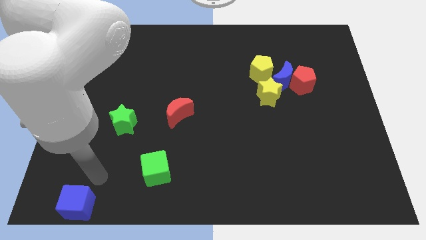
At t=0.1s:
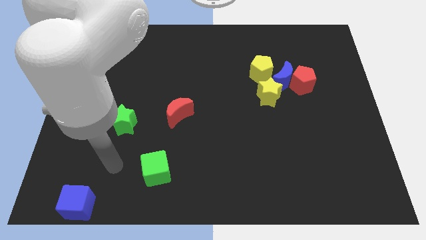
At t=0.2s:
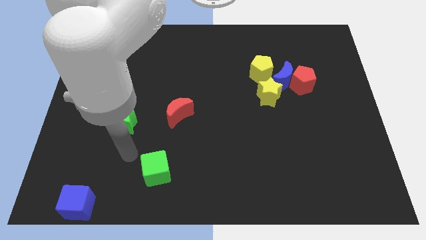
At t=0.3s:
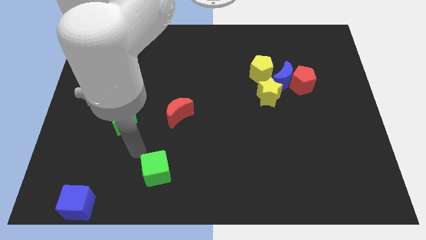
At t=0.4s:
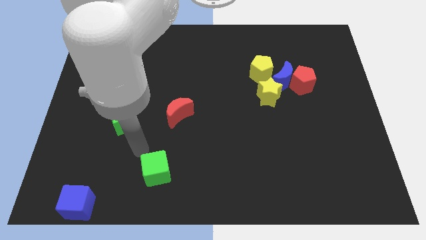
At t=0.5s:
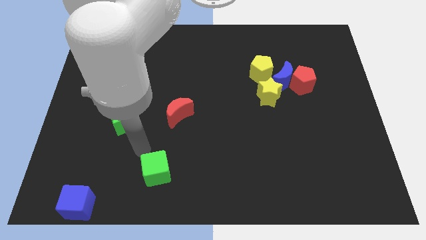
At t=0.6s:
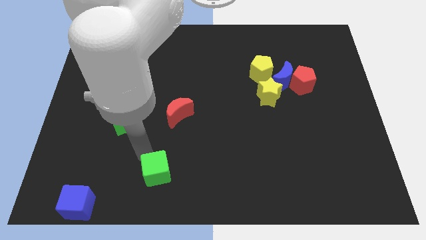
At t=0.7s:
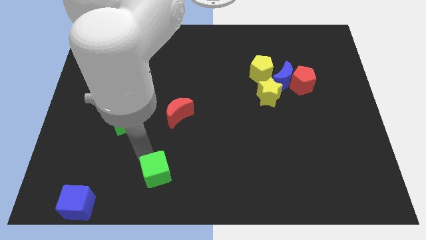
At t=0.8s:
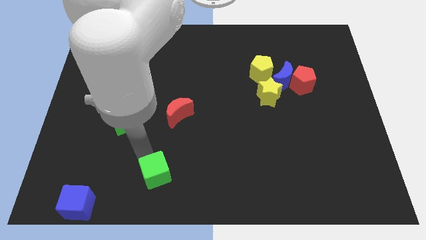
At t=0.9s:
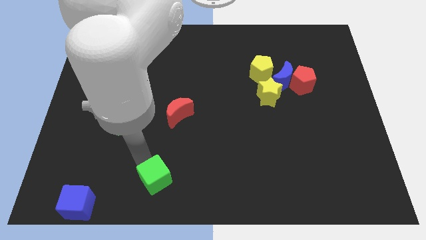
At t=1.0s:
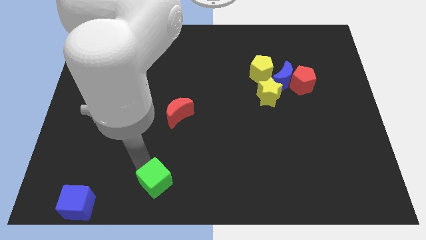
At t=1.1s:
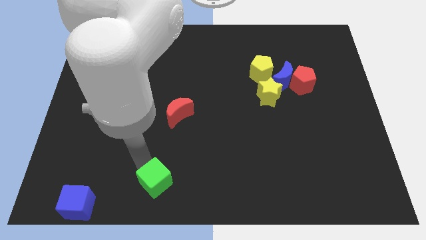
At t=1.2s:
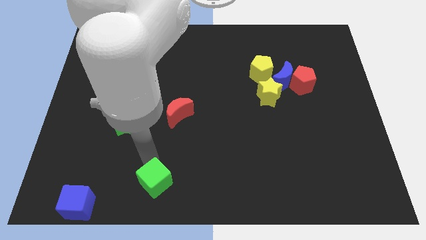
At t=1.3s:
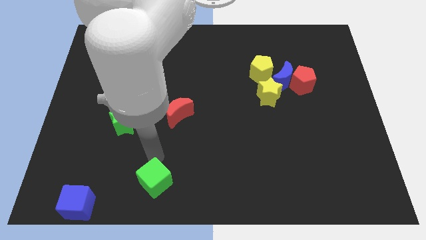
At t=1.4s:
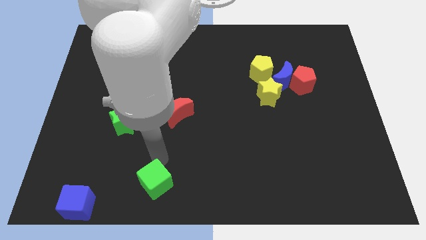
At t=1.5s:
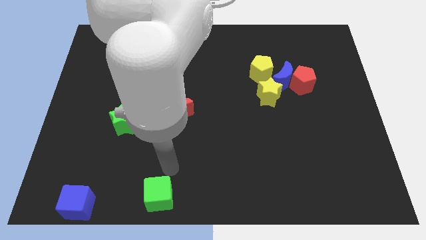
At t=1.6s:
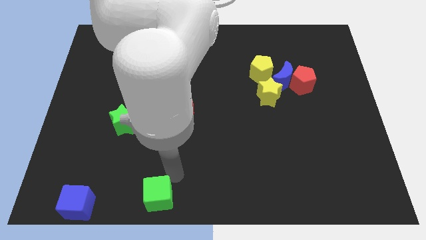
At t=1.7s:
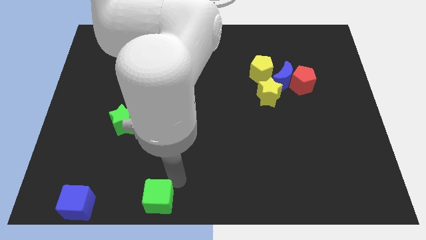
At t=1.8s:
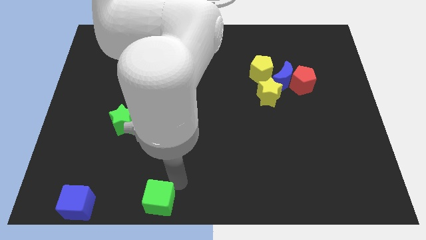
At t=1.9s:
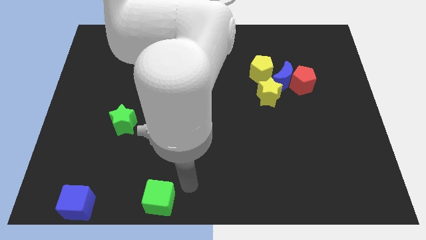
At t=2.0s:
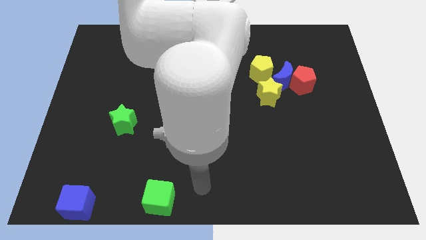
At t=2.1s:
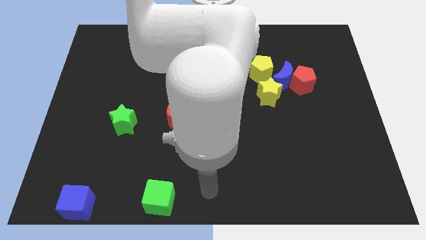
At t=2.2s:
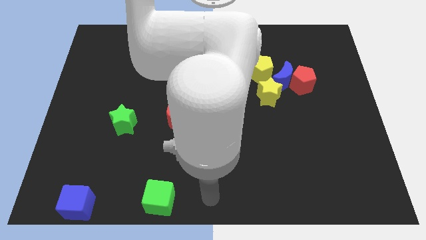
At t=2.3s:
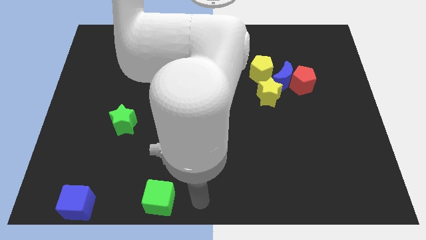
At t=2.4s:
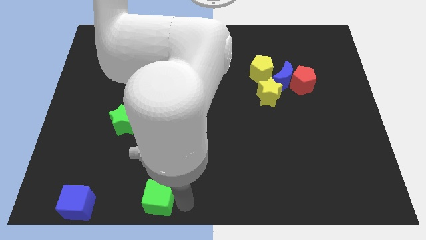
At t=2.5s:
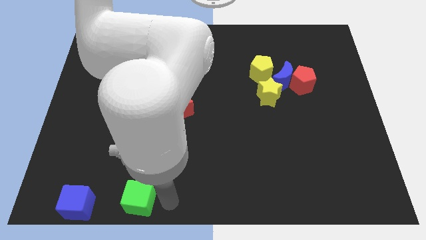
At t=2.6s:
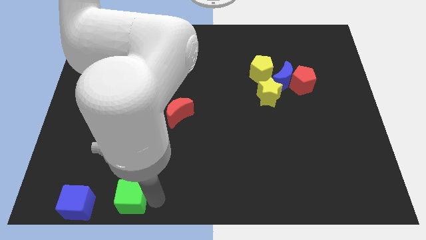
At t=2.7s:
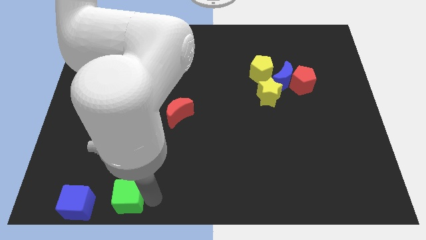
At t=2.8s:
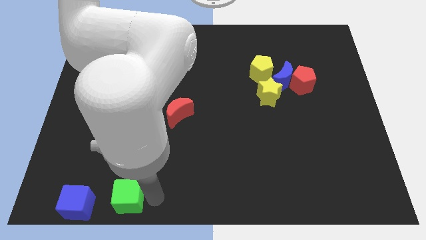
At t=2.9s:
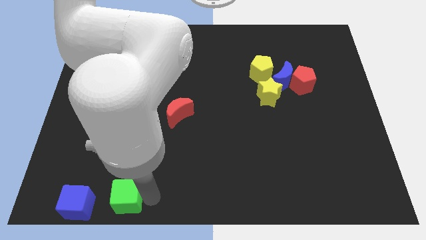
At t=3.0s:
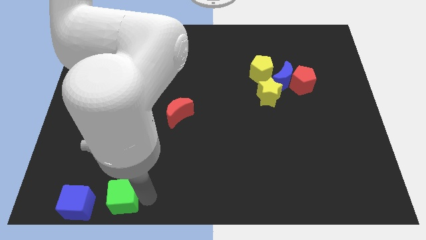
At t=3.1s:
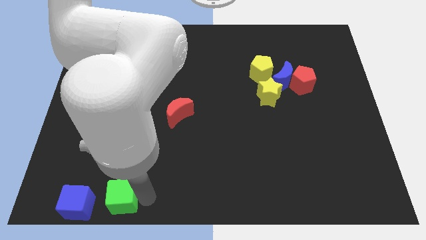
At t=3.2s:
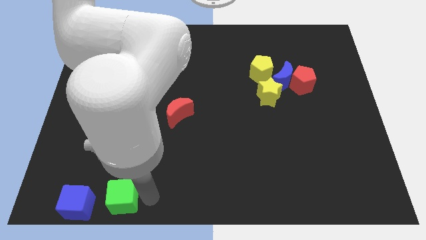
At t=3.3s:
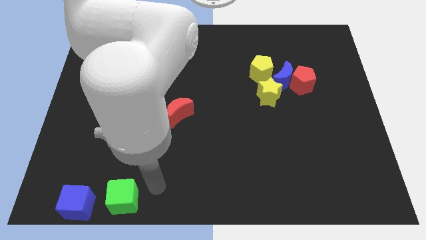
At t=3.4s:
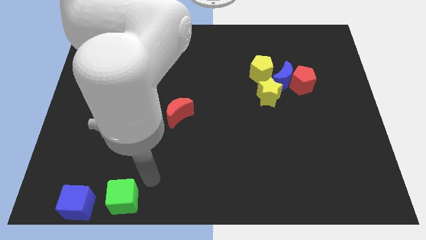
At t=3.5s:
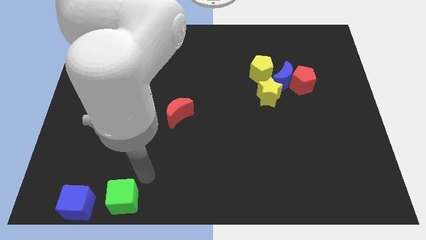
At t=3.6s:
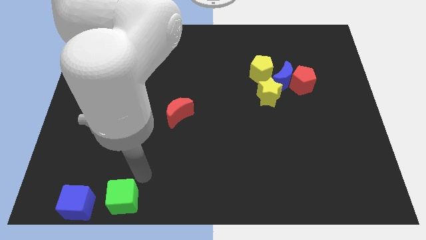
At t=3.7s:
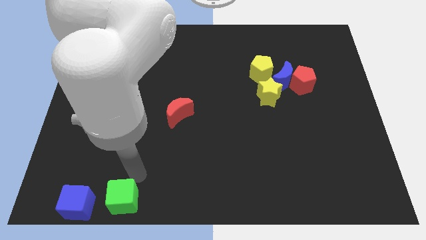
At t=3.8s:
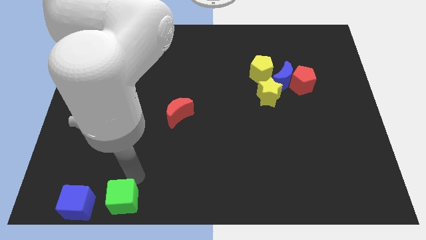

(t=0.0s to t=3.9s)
place the green cube to the right of the blue cube

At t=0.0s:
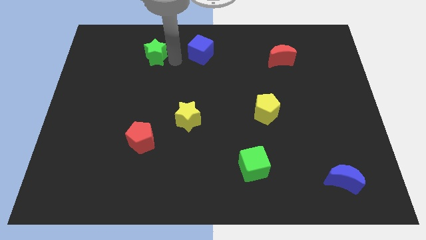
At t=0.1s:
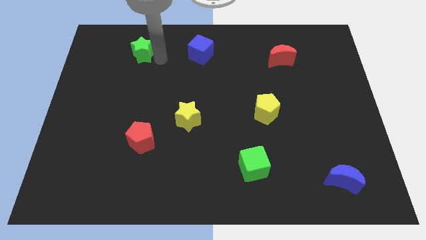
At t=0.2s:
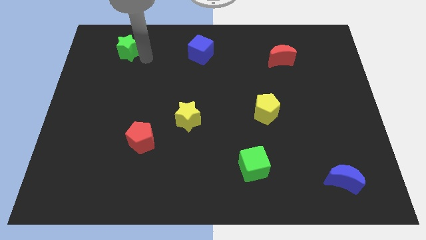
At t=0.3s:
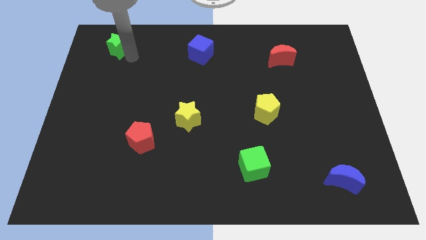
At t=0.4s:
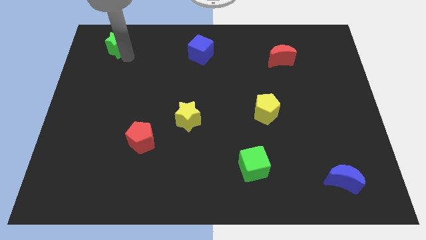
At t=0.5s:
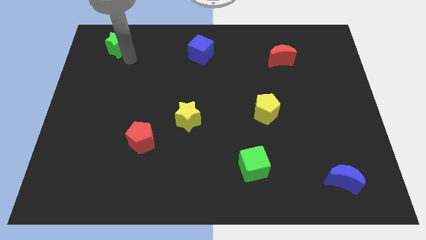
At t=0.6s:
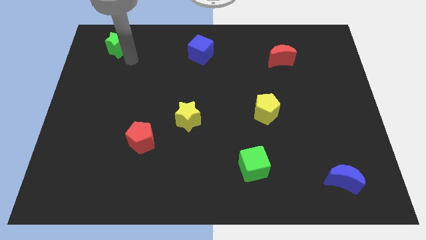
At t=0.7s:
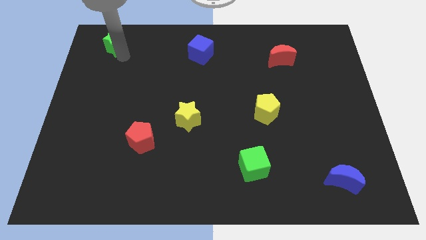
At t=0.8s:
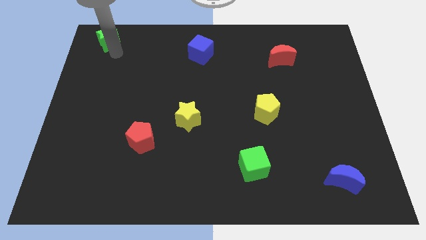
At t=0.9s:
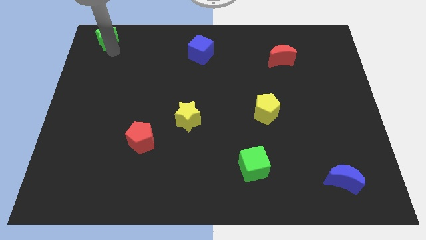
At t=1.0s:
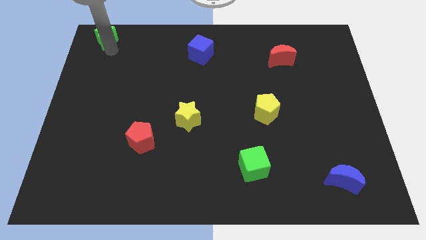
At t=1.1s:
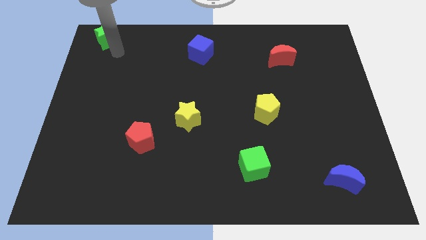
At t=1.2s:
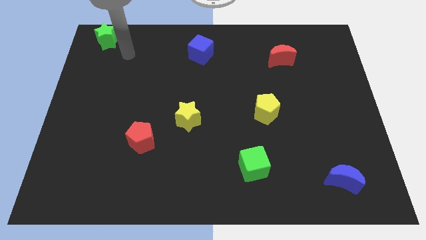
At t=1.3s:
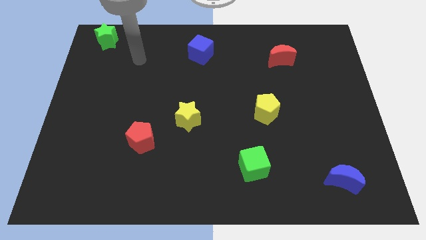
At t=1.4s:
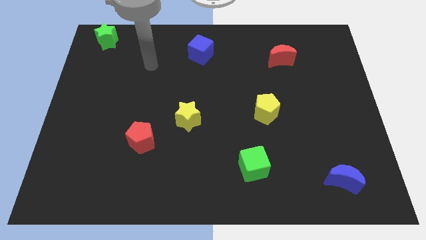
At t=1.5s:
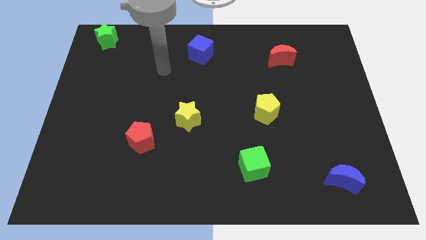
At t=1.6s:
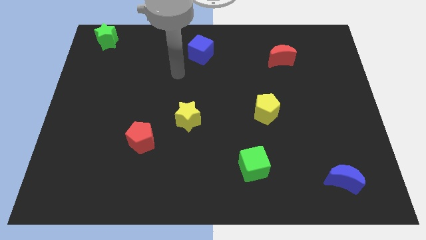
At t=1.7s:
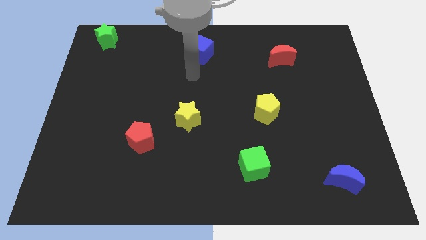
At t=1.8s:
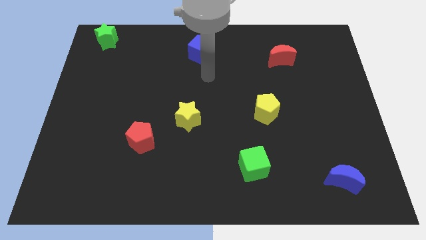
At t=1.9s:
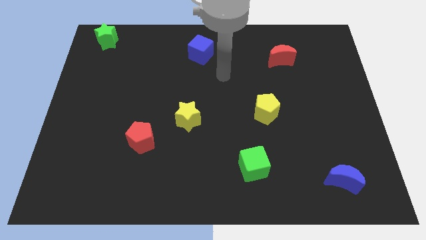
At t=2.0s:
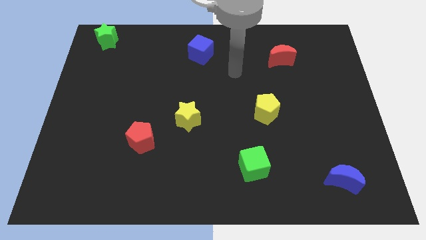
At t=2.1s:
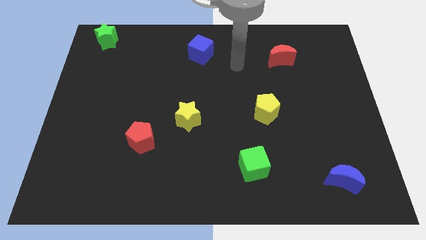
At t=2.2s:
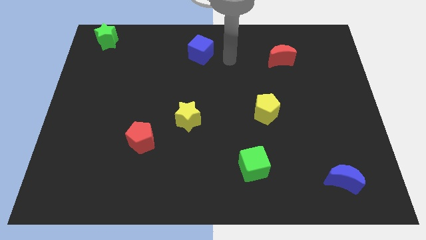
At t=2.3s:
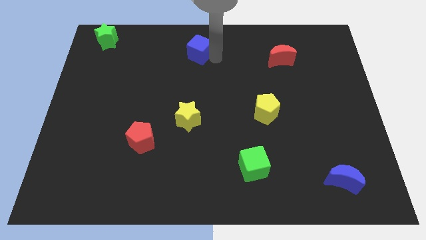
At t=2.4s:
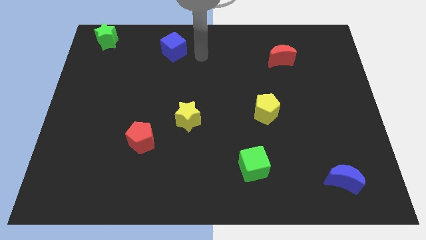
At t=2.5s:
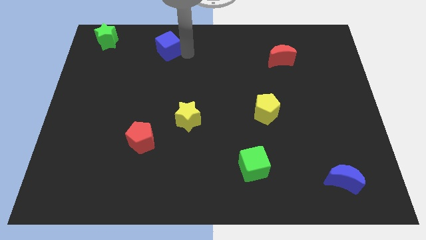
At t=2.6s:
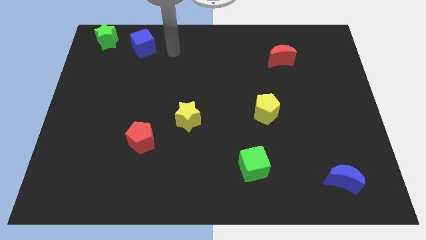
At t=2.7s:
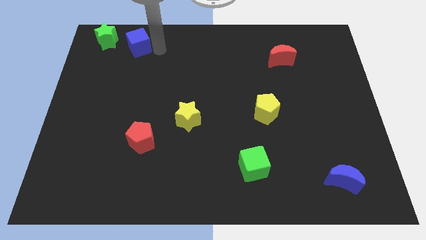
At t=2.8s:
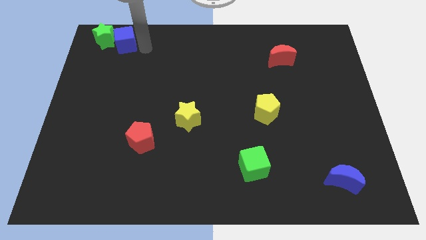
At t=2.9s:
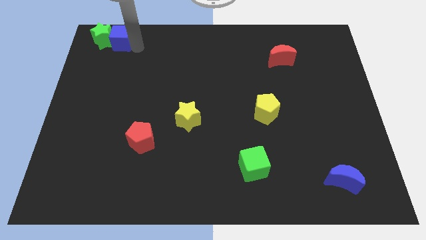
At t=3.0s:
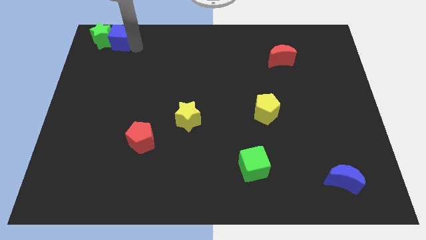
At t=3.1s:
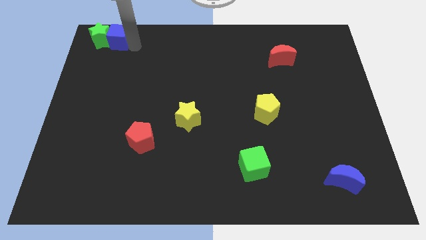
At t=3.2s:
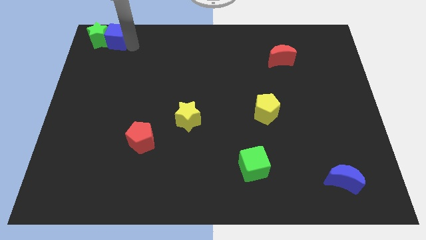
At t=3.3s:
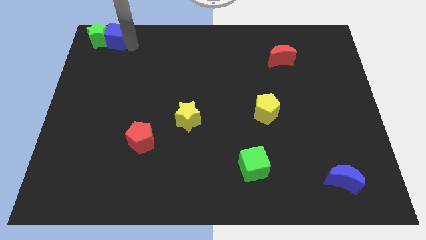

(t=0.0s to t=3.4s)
move the blue cube into the green star

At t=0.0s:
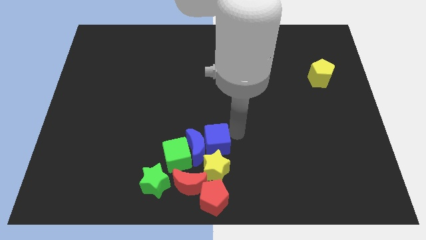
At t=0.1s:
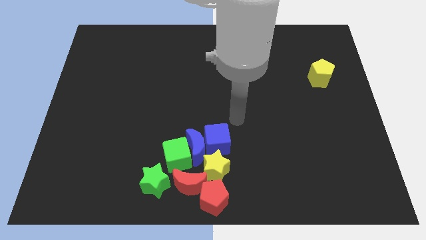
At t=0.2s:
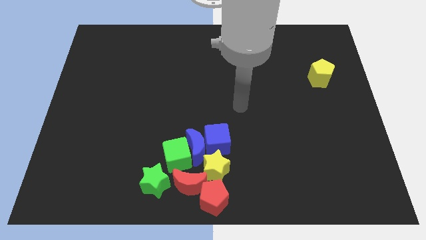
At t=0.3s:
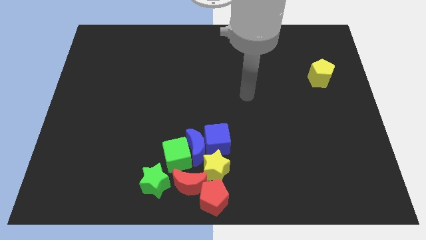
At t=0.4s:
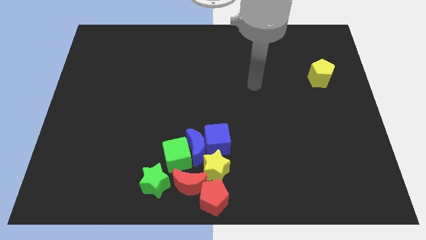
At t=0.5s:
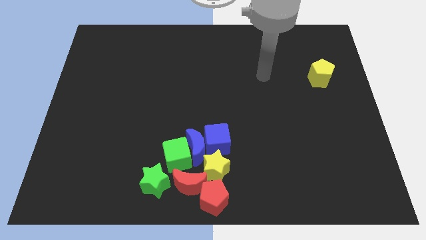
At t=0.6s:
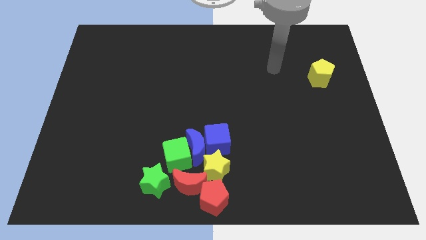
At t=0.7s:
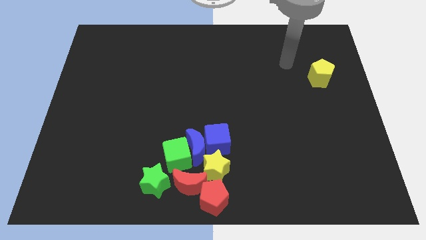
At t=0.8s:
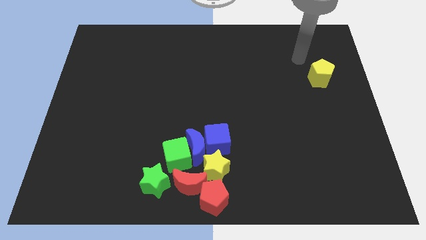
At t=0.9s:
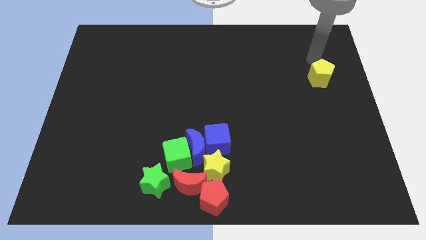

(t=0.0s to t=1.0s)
move your arm closer to the top of the yellow pentagon

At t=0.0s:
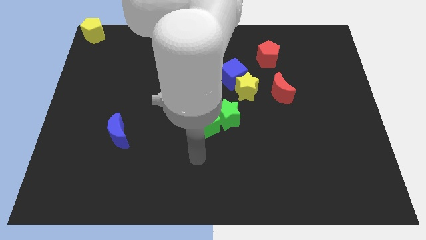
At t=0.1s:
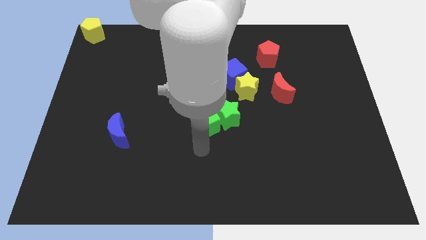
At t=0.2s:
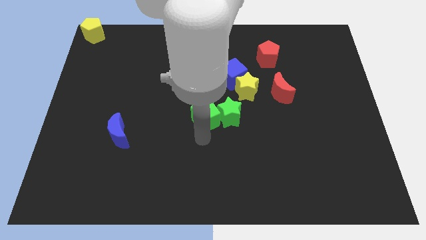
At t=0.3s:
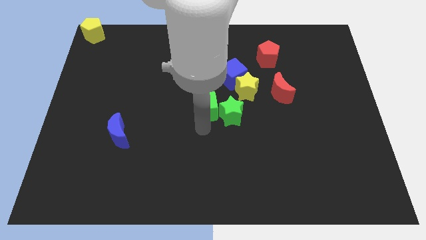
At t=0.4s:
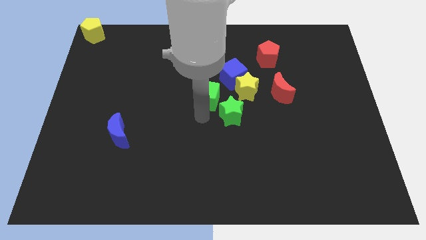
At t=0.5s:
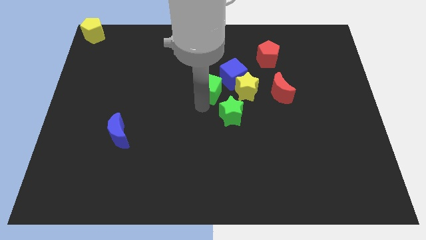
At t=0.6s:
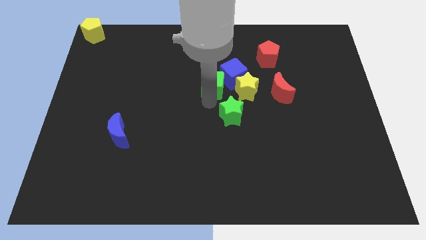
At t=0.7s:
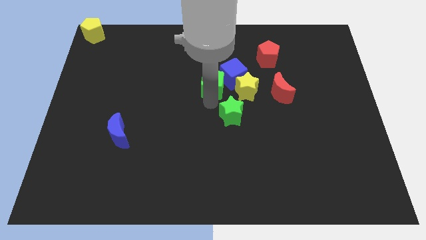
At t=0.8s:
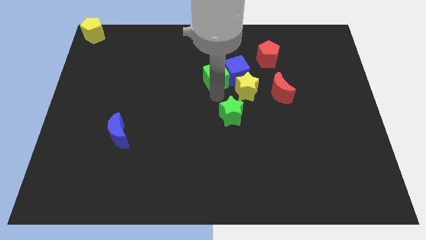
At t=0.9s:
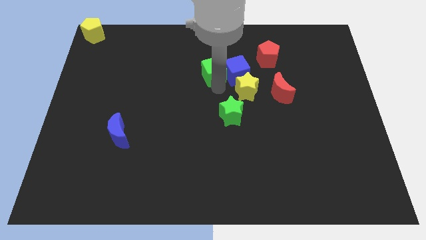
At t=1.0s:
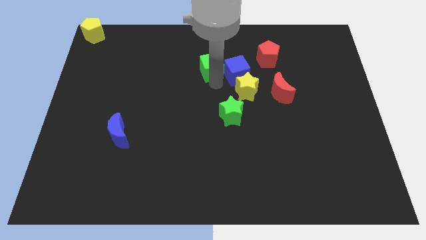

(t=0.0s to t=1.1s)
slide green cube to the left of blue cube
